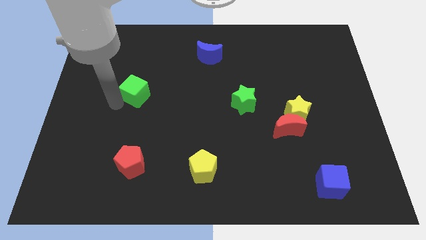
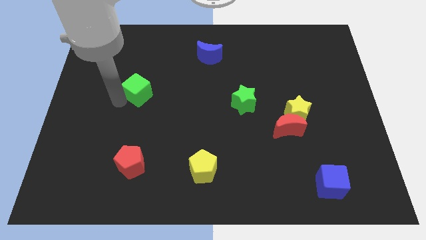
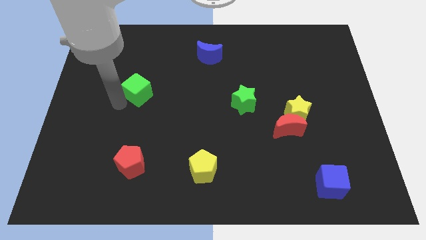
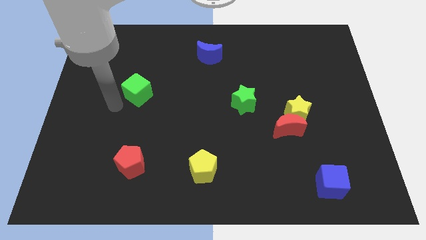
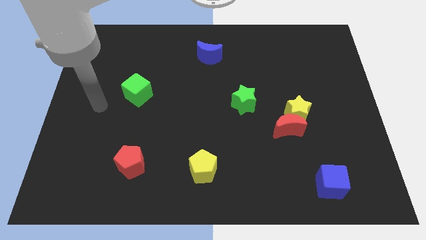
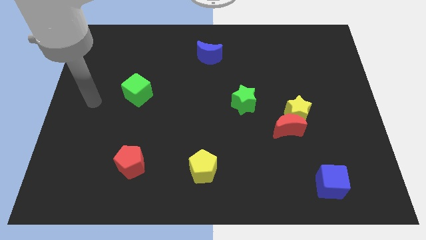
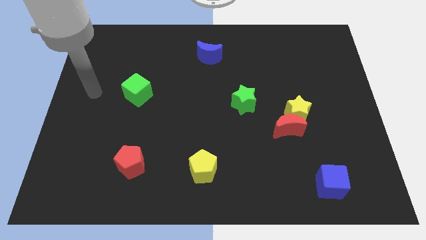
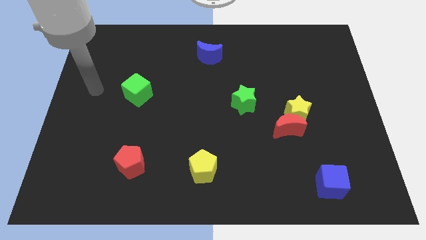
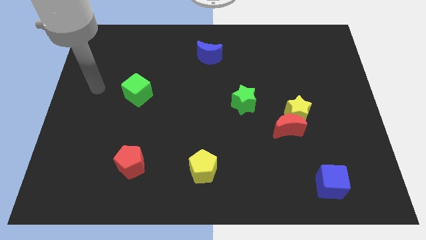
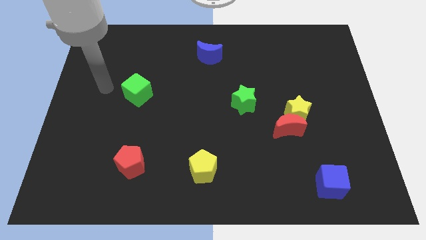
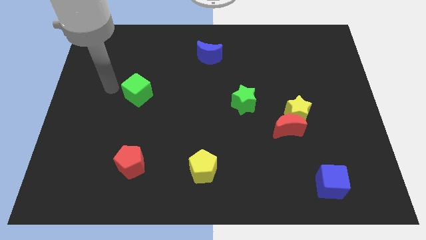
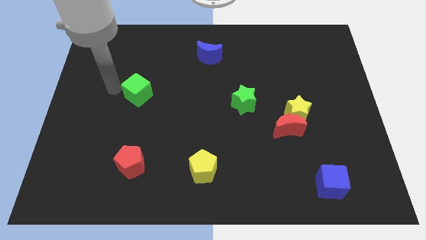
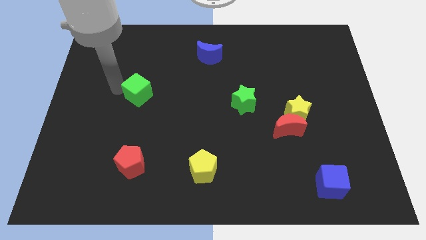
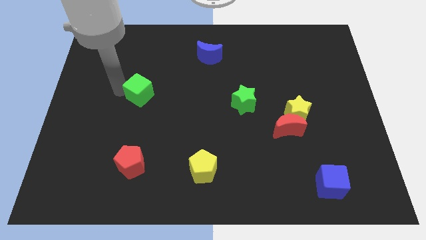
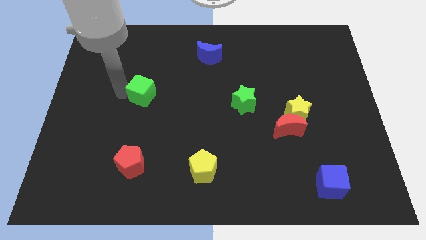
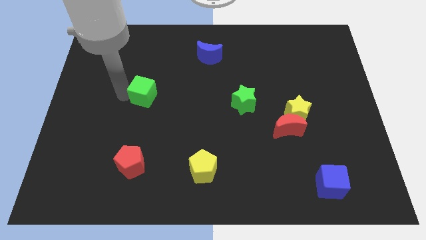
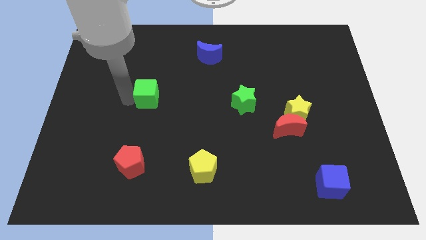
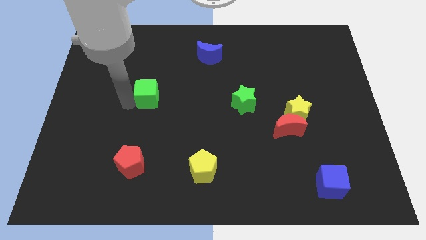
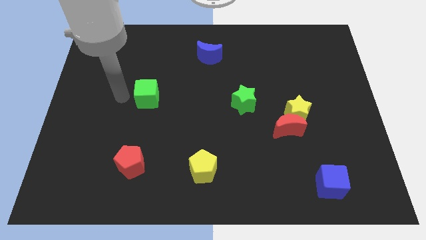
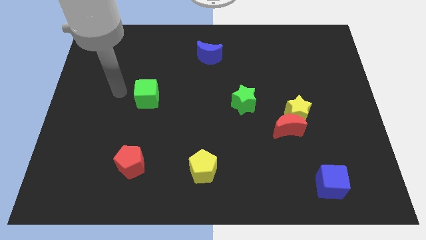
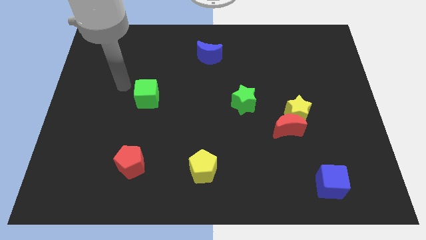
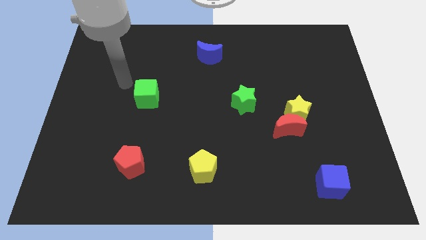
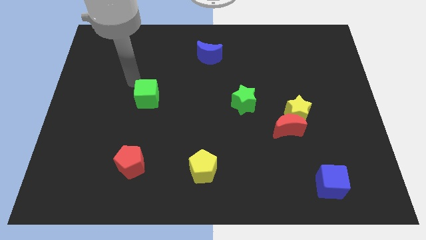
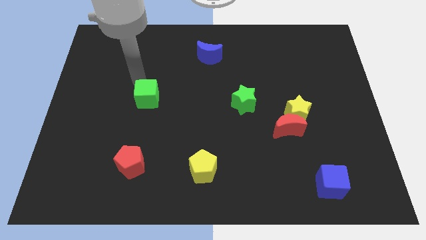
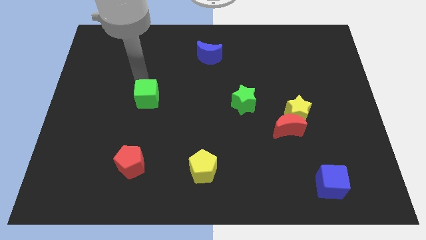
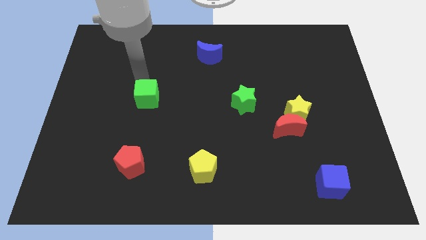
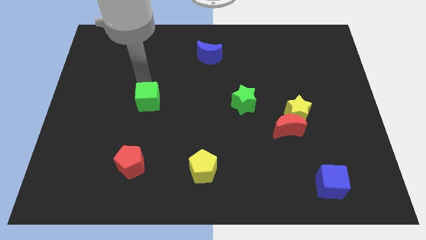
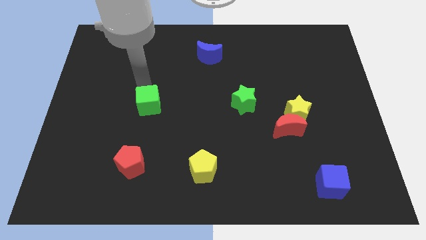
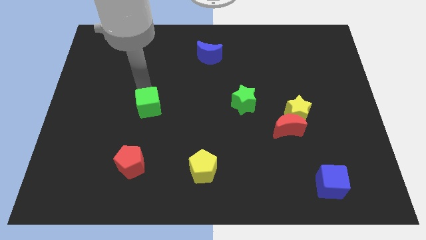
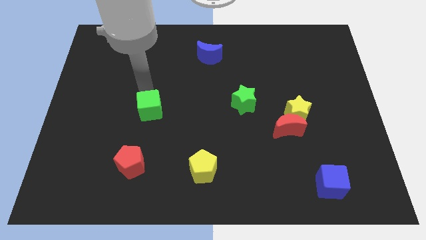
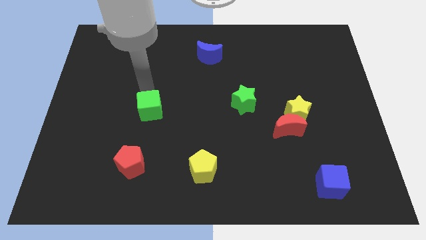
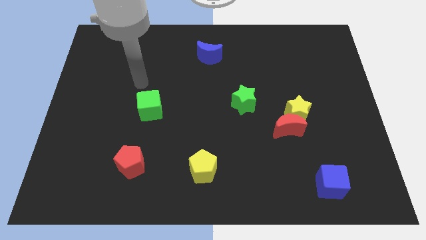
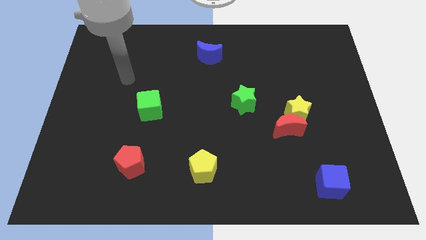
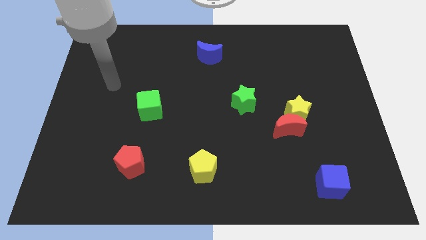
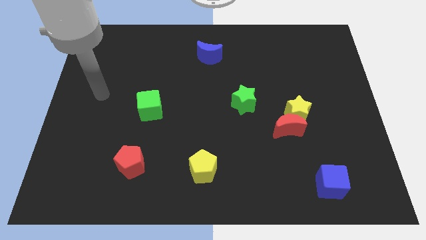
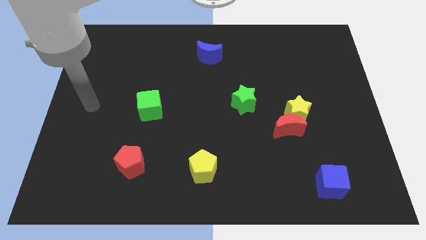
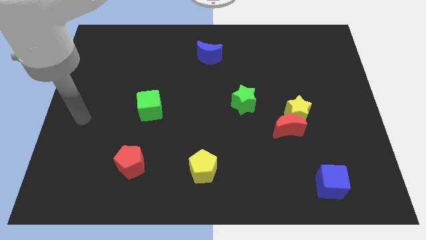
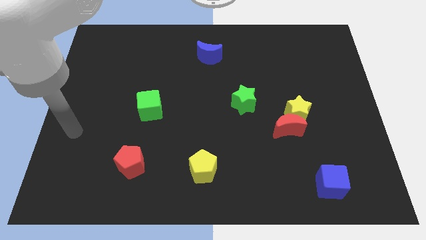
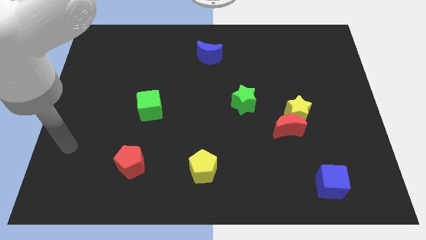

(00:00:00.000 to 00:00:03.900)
put the green cube horizontally left to the green star

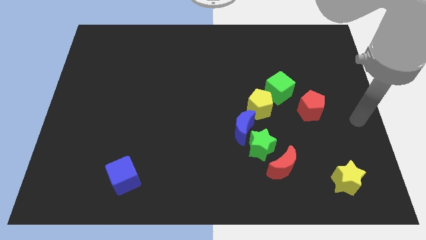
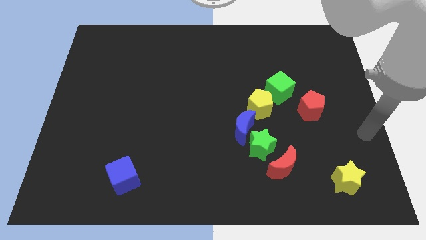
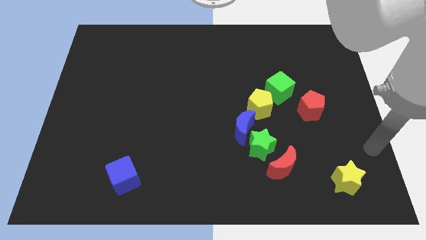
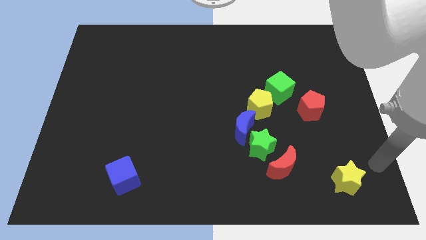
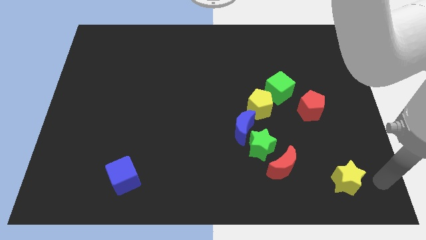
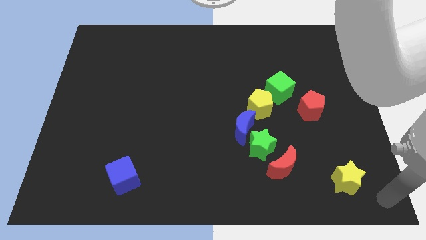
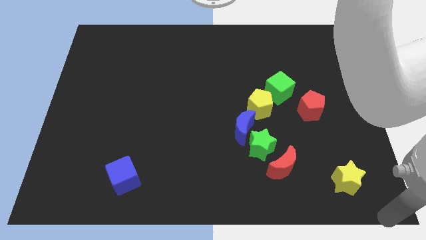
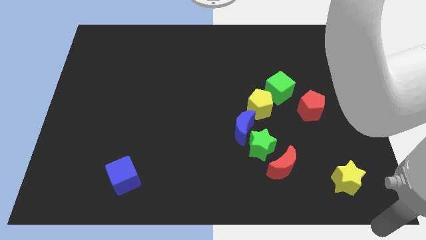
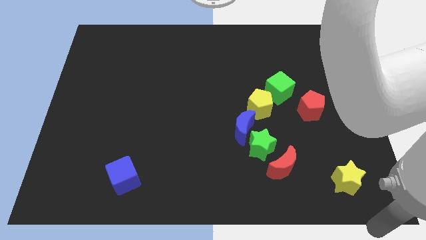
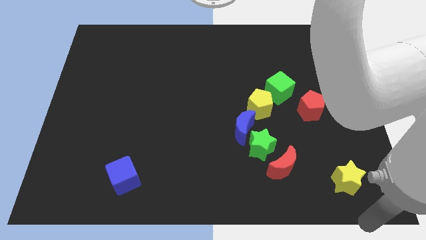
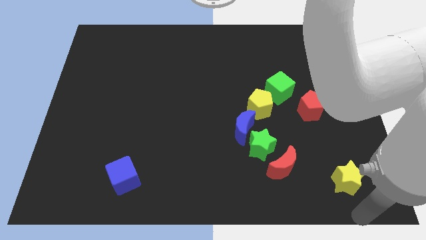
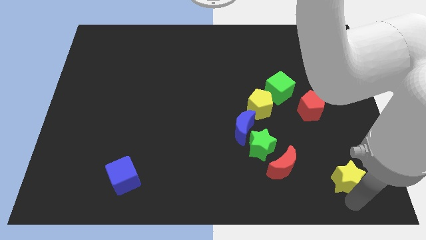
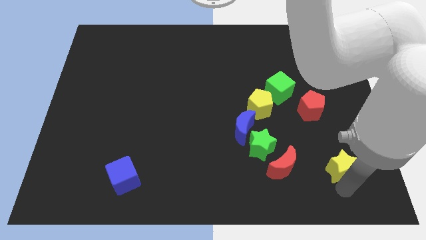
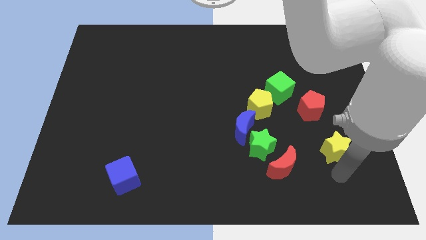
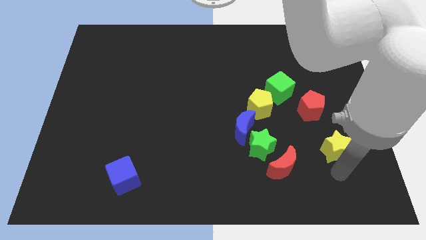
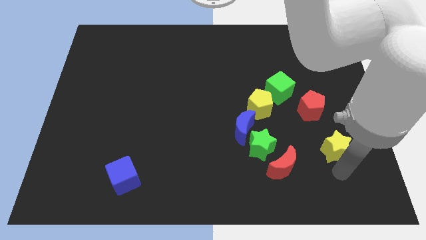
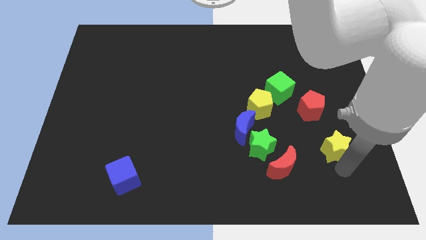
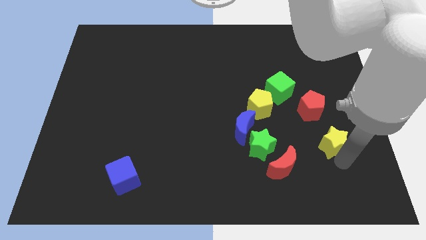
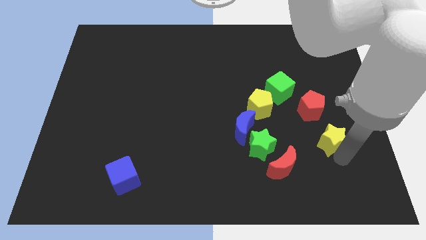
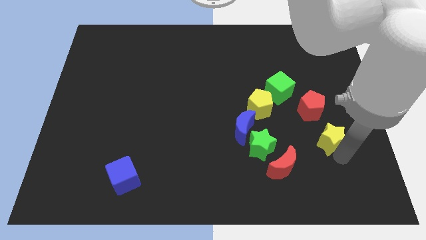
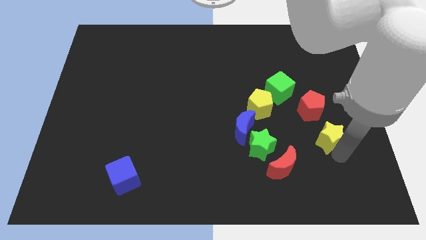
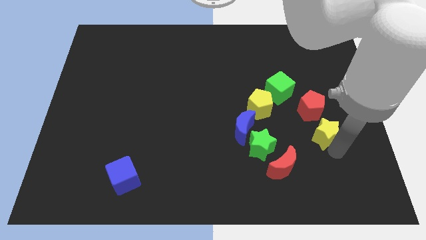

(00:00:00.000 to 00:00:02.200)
push the yellow star diagonally below red pentagon

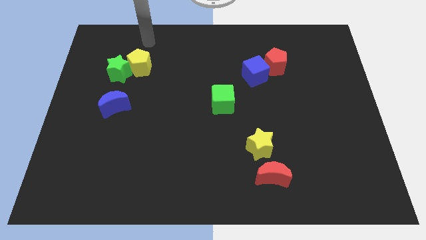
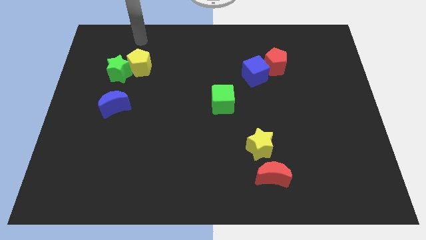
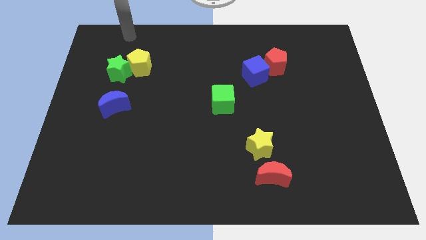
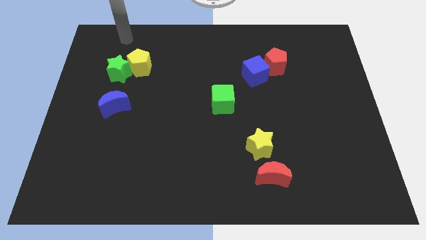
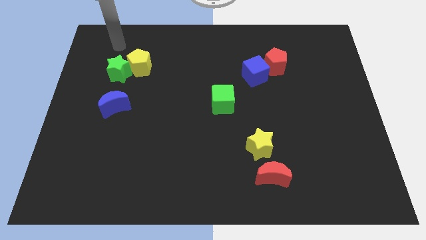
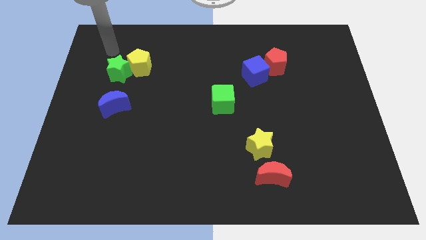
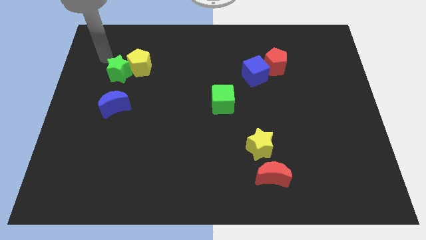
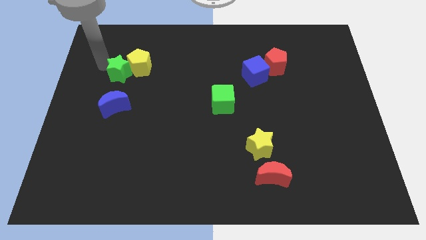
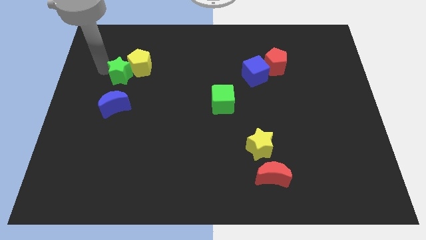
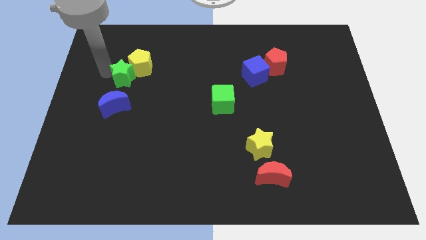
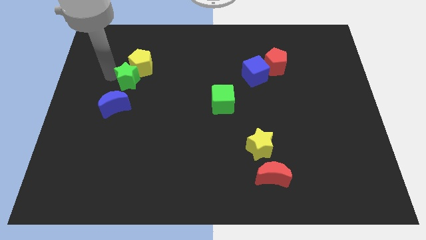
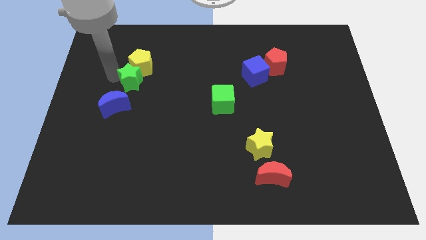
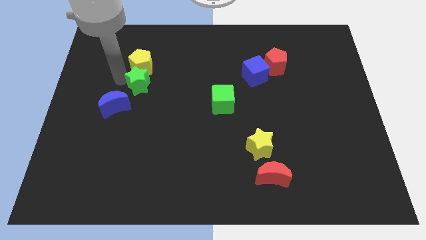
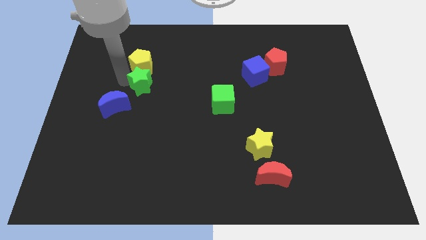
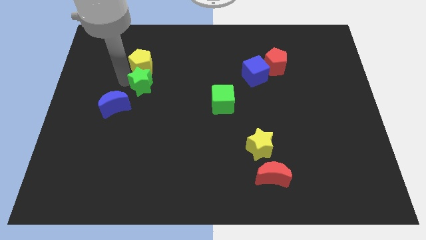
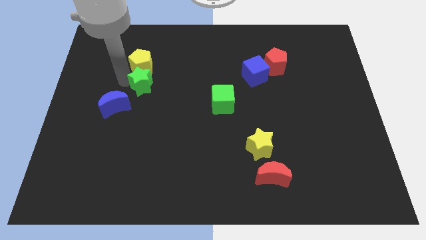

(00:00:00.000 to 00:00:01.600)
place the green star below the yellow pentagon

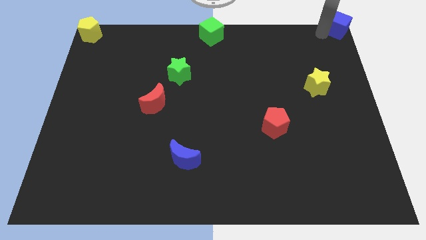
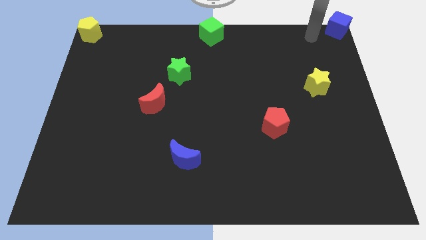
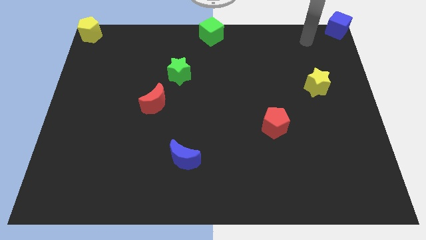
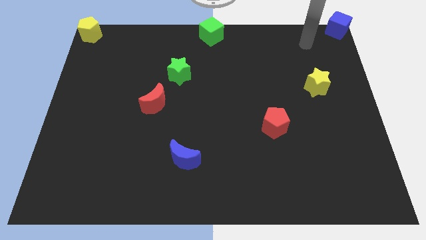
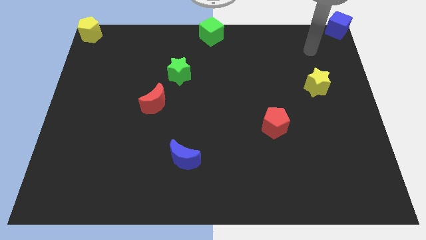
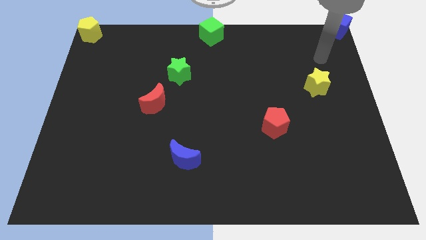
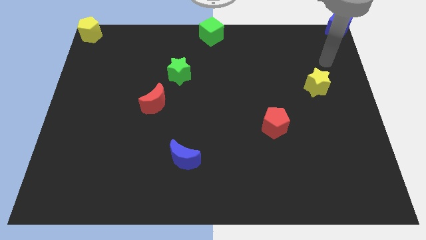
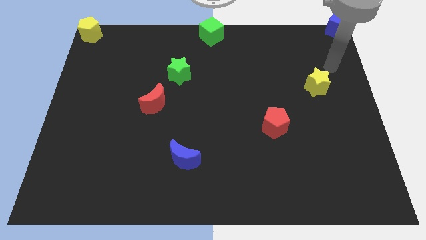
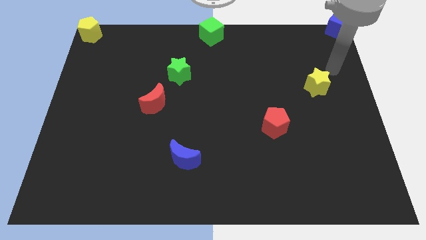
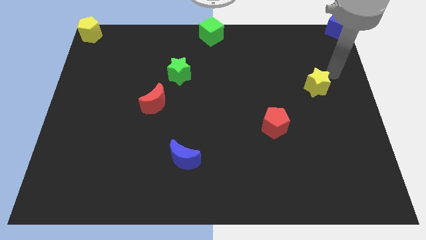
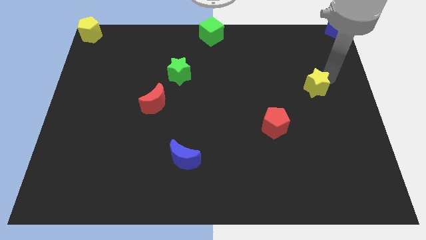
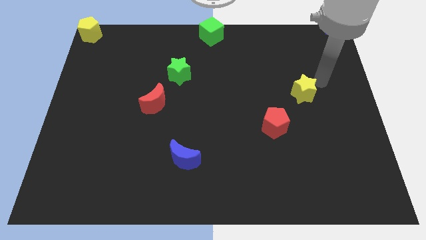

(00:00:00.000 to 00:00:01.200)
point your arm towards the top right side of the yellow star
